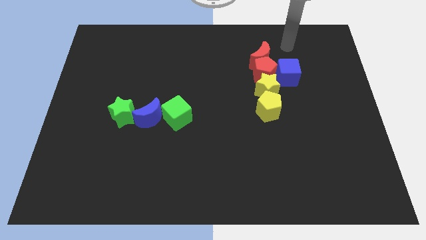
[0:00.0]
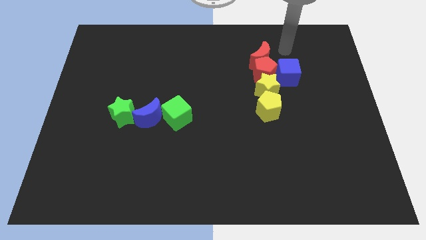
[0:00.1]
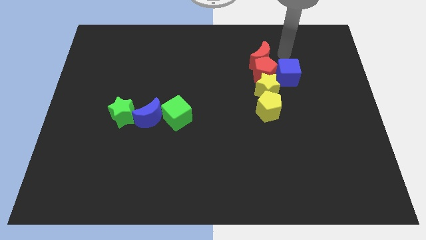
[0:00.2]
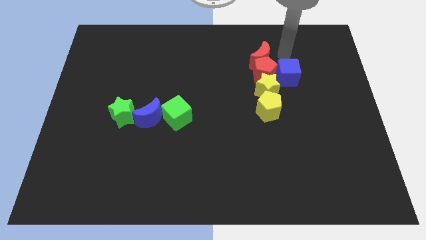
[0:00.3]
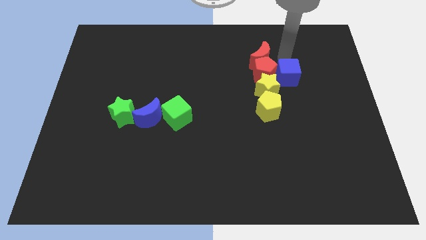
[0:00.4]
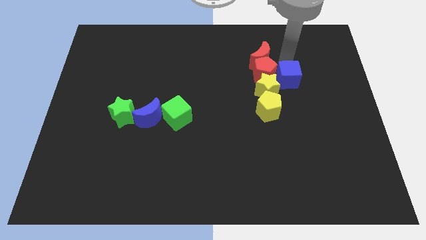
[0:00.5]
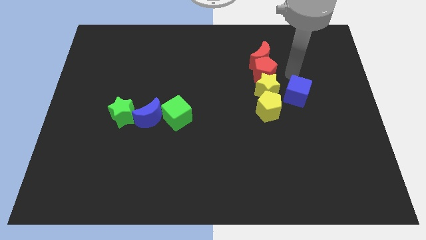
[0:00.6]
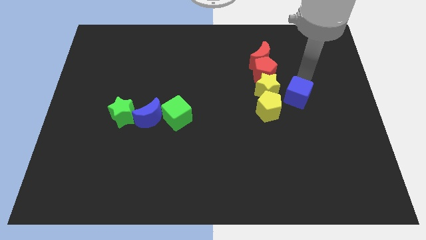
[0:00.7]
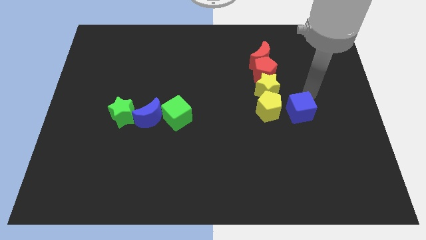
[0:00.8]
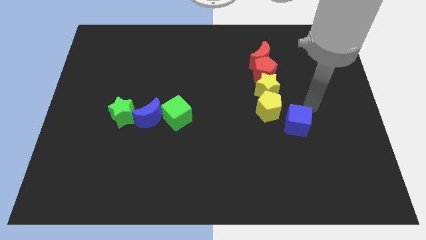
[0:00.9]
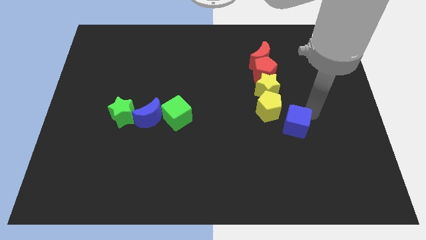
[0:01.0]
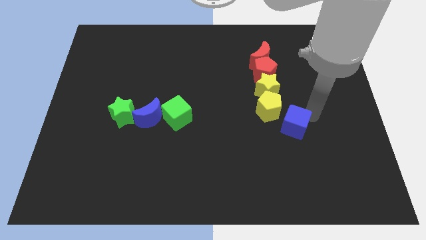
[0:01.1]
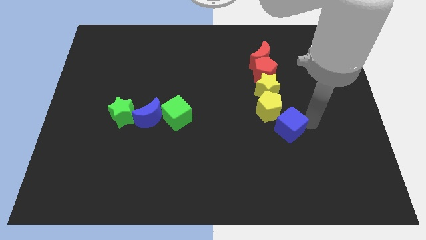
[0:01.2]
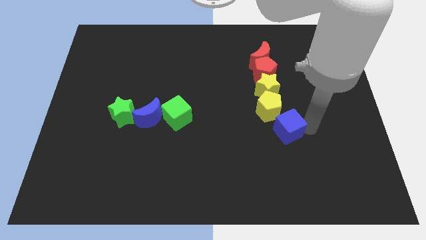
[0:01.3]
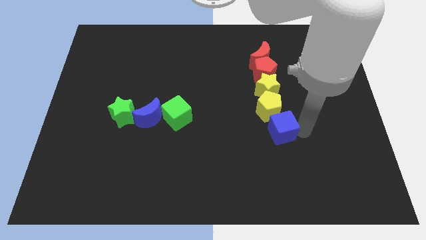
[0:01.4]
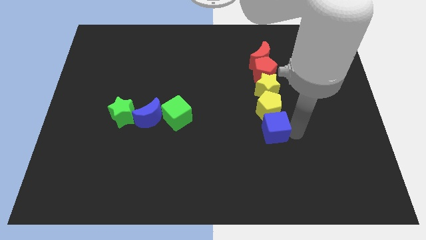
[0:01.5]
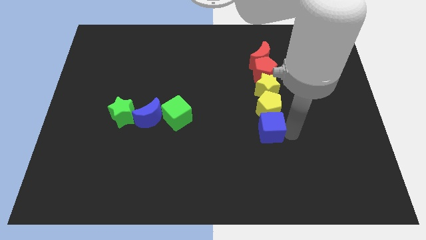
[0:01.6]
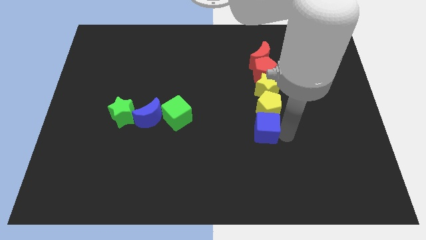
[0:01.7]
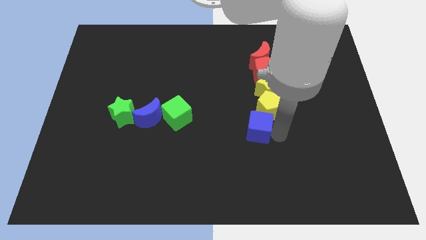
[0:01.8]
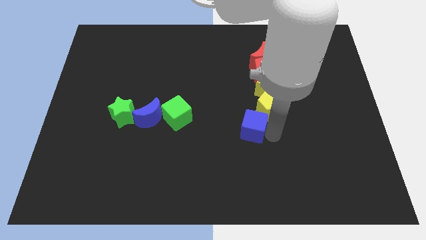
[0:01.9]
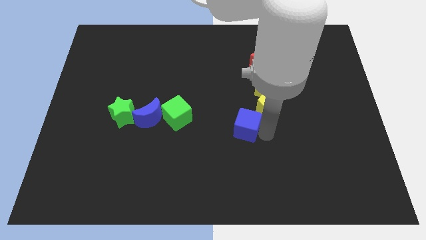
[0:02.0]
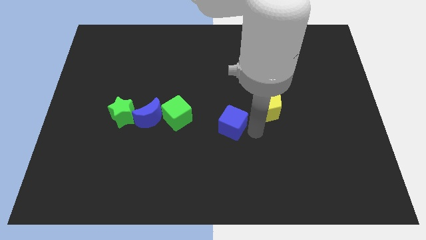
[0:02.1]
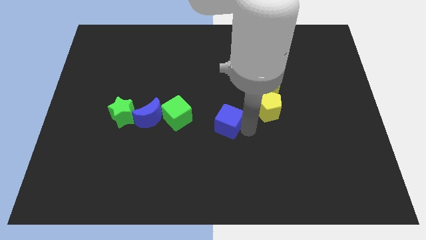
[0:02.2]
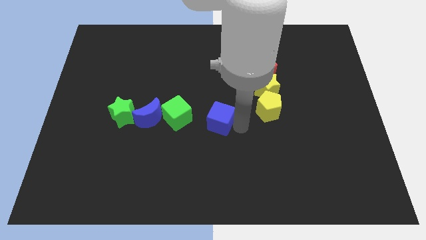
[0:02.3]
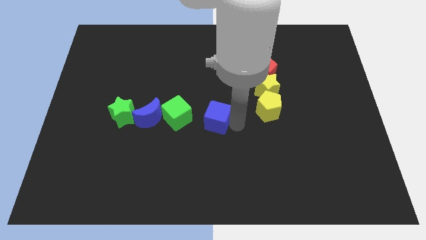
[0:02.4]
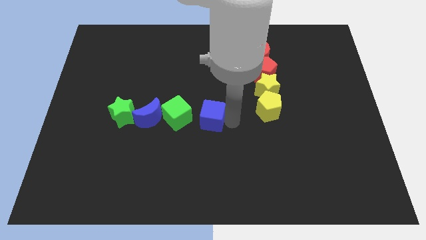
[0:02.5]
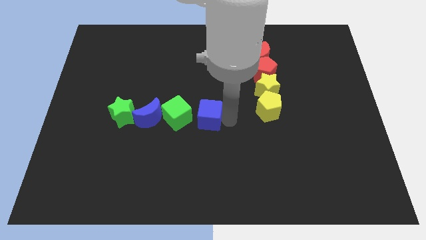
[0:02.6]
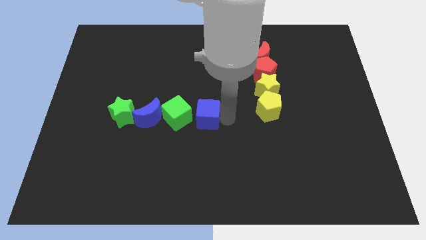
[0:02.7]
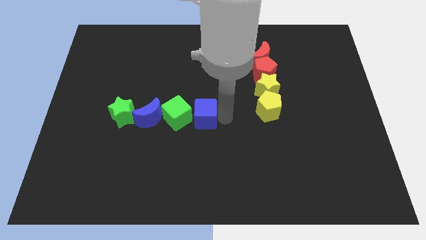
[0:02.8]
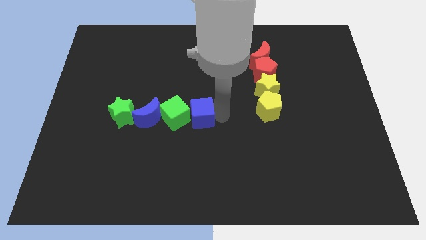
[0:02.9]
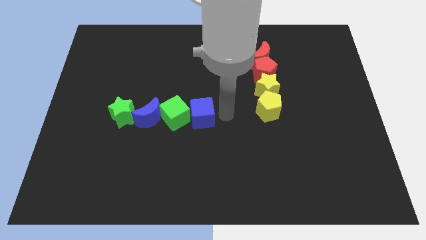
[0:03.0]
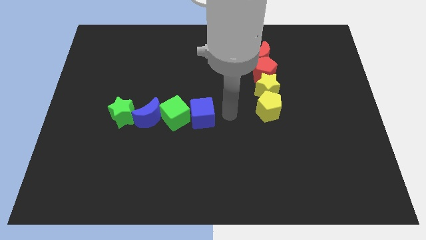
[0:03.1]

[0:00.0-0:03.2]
push the blue cube to the right of the green cube

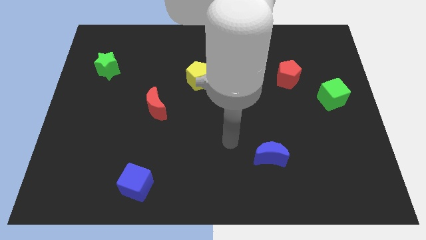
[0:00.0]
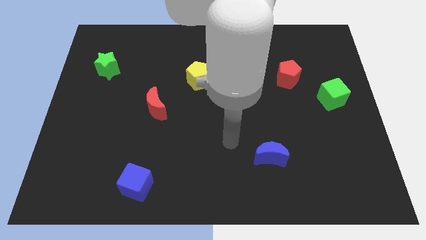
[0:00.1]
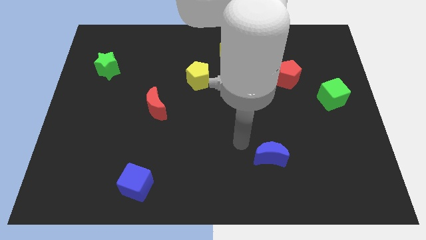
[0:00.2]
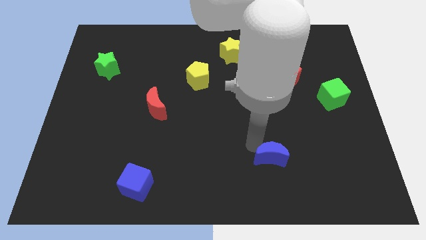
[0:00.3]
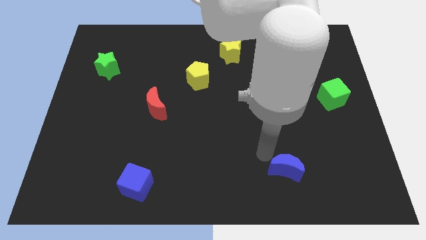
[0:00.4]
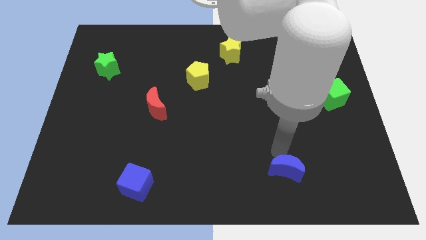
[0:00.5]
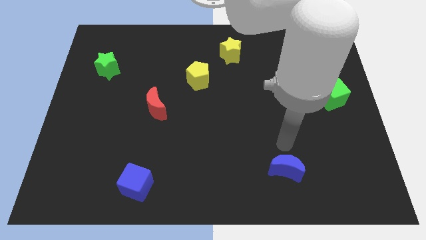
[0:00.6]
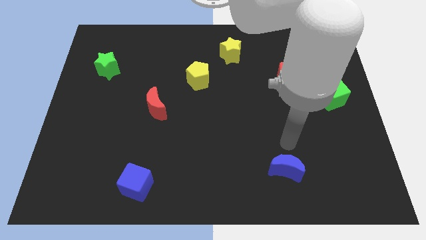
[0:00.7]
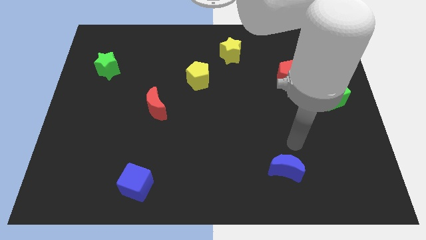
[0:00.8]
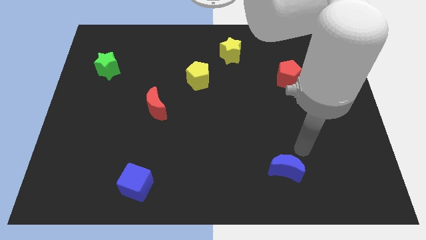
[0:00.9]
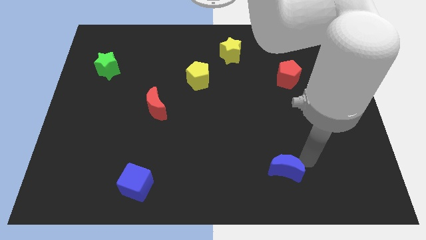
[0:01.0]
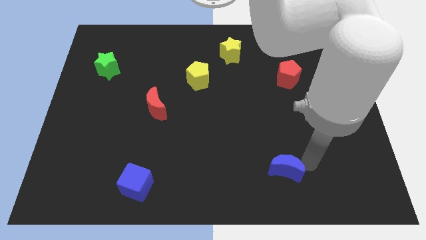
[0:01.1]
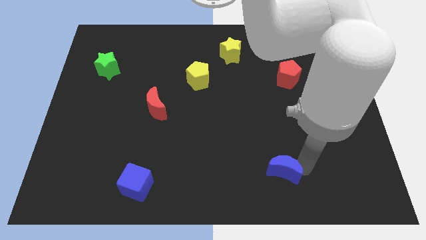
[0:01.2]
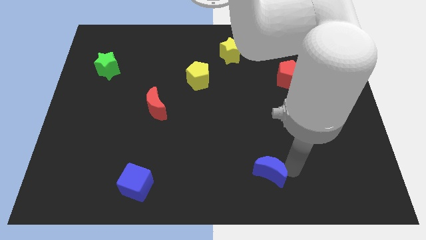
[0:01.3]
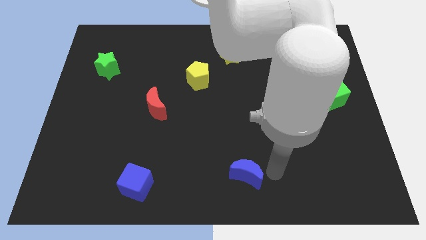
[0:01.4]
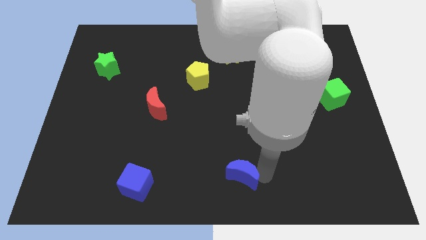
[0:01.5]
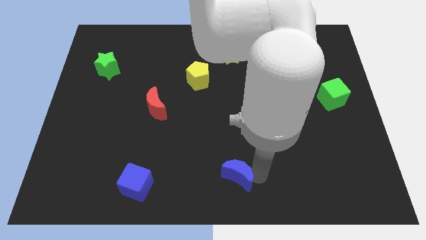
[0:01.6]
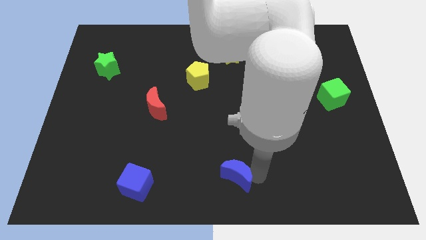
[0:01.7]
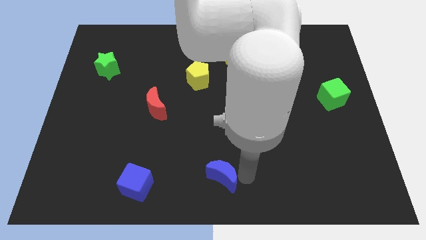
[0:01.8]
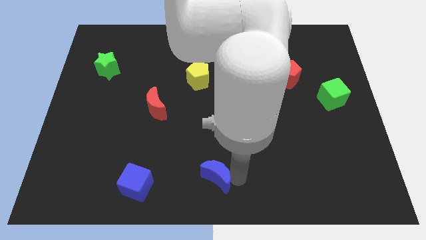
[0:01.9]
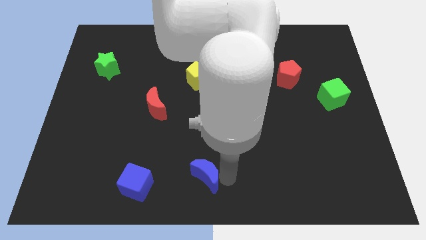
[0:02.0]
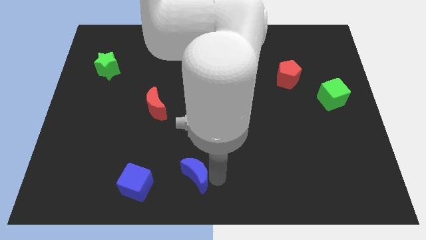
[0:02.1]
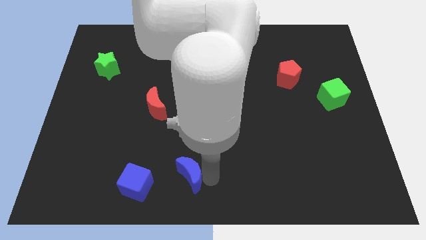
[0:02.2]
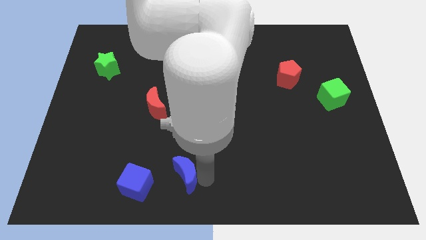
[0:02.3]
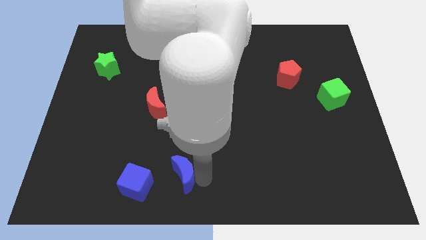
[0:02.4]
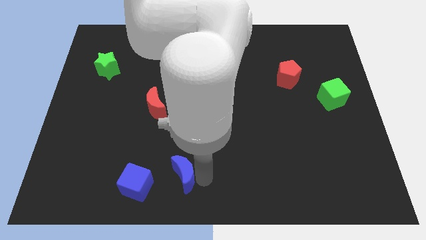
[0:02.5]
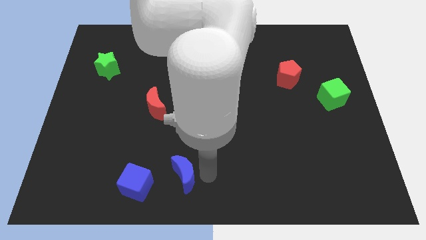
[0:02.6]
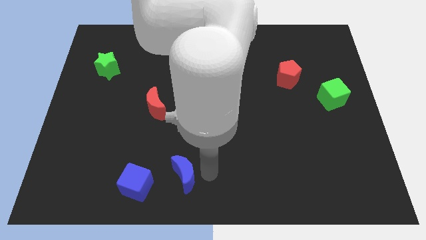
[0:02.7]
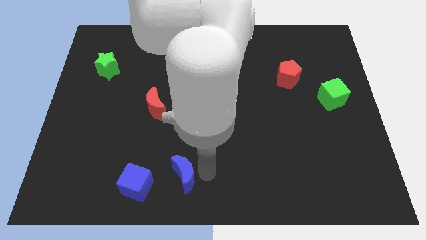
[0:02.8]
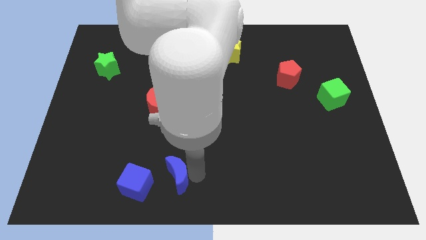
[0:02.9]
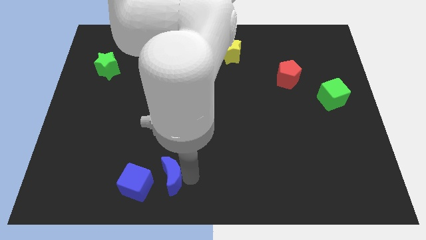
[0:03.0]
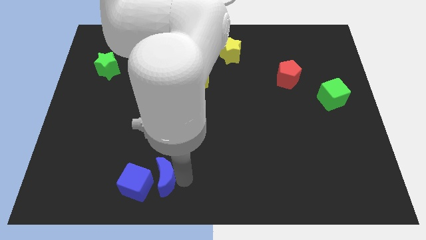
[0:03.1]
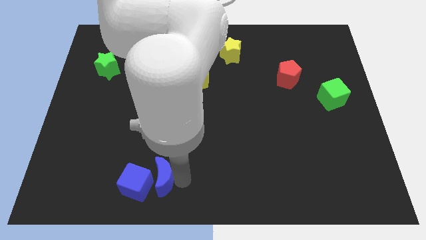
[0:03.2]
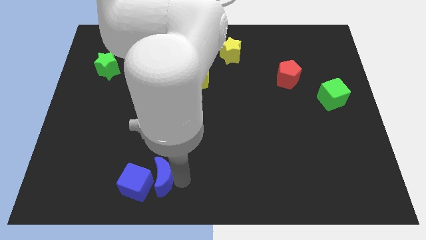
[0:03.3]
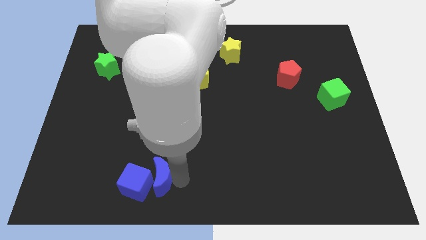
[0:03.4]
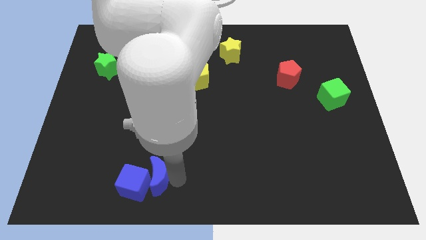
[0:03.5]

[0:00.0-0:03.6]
drag the blue crescent into the right side of the blue cube

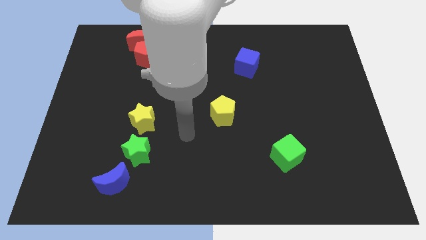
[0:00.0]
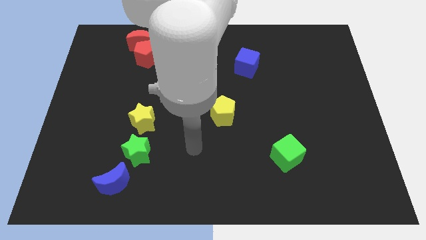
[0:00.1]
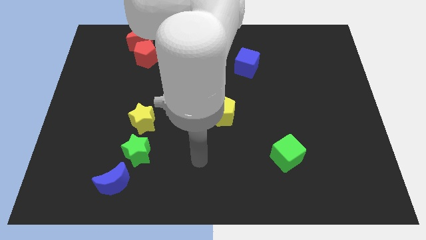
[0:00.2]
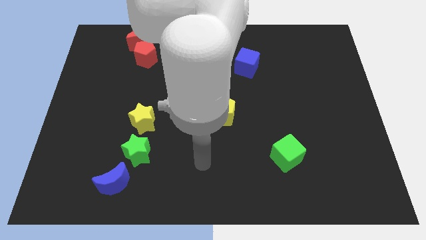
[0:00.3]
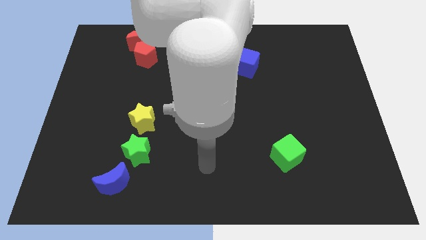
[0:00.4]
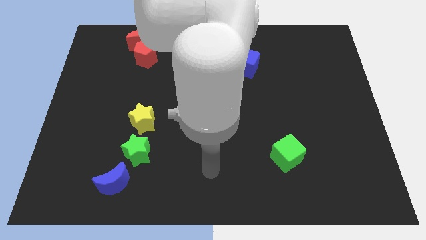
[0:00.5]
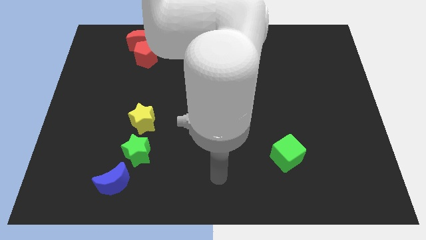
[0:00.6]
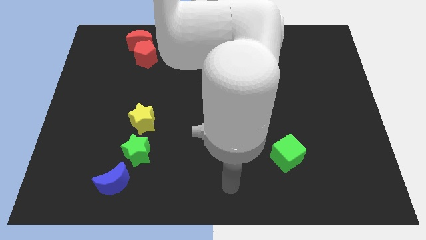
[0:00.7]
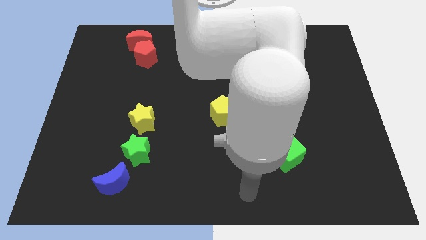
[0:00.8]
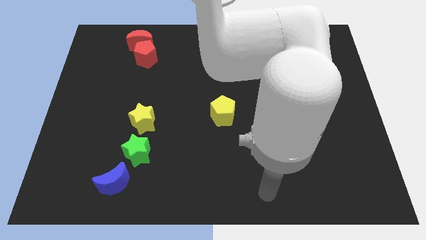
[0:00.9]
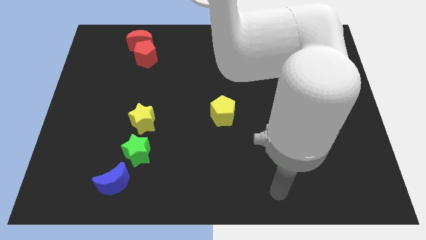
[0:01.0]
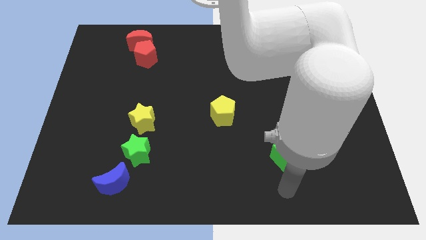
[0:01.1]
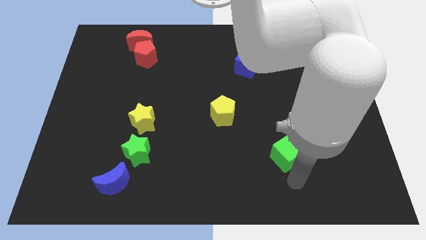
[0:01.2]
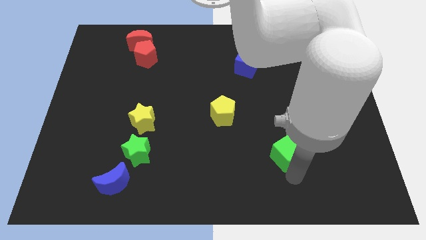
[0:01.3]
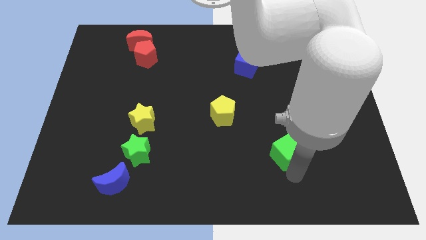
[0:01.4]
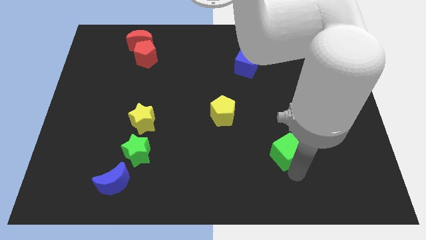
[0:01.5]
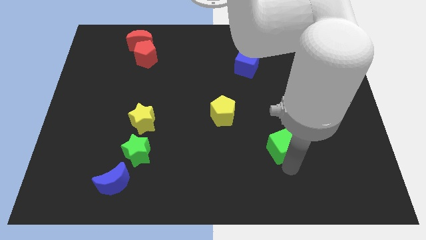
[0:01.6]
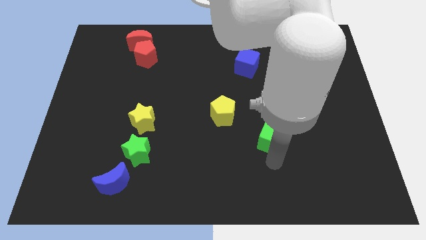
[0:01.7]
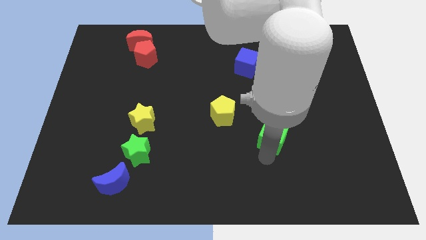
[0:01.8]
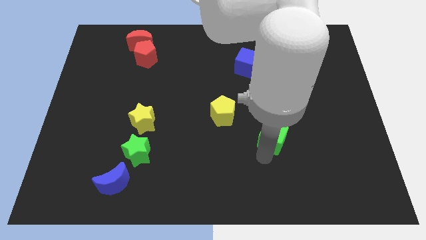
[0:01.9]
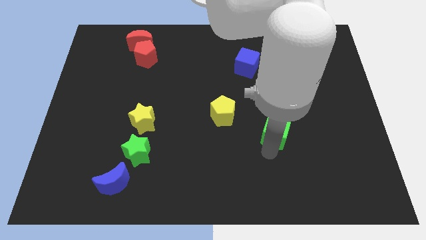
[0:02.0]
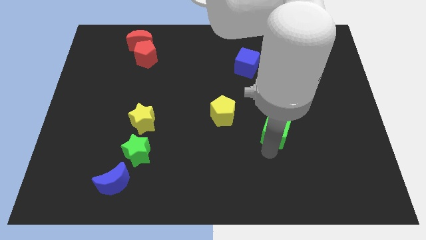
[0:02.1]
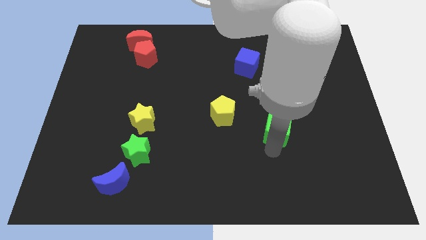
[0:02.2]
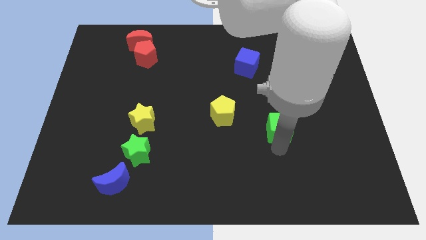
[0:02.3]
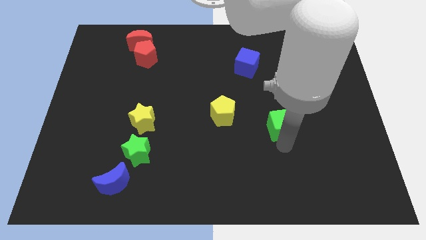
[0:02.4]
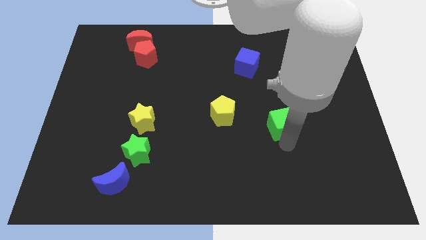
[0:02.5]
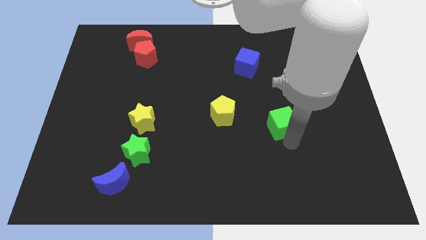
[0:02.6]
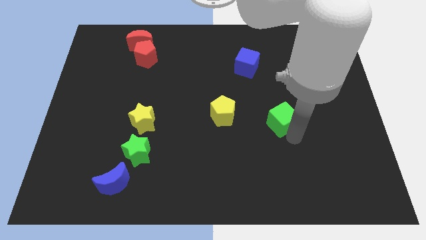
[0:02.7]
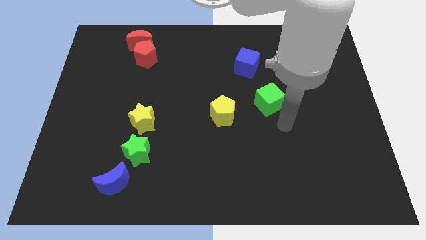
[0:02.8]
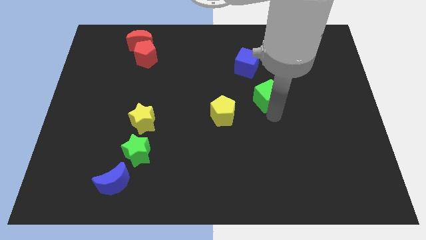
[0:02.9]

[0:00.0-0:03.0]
move the green cube to the bottom right of the blue cube
